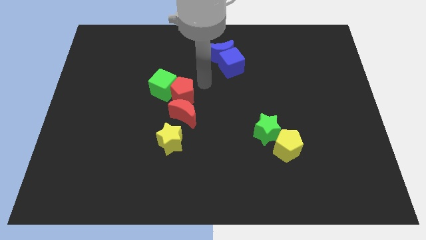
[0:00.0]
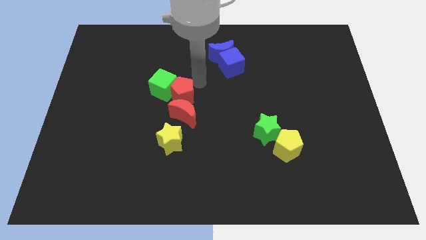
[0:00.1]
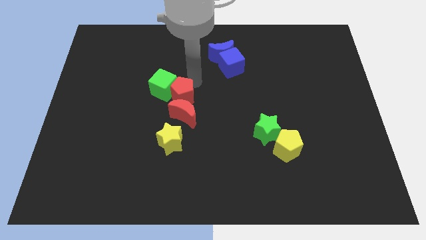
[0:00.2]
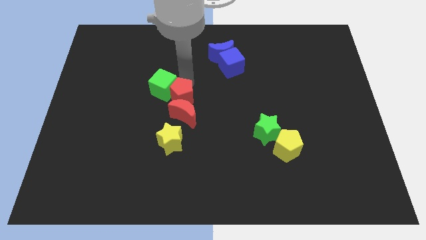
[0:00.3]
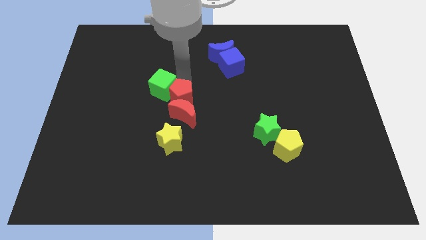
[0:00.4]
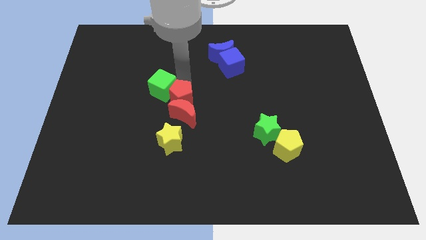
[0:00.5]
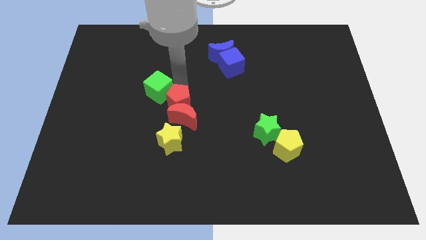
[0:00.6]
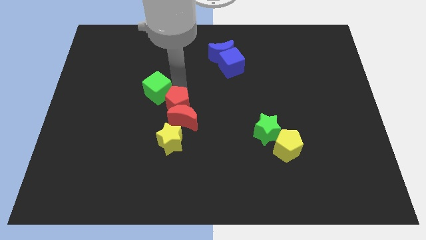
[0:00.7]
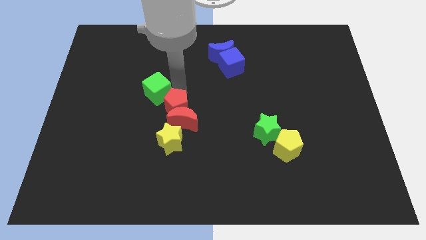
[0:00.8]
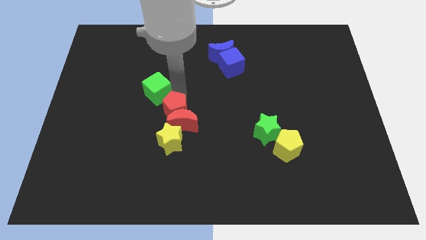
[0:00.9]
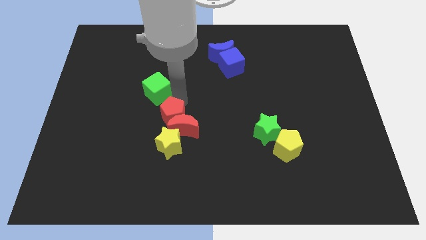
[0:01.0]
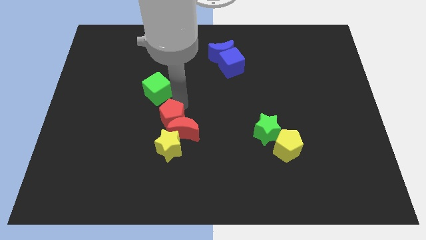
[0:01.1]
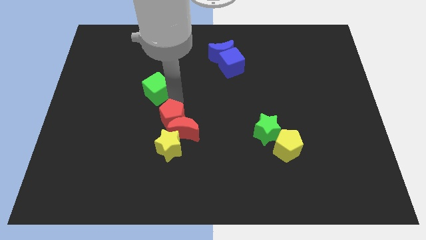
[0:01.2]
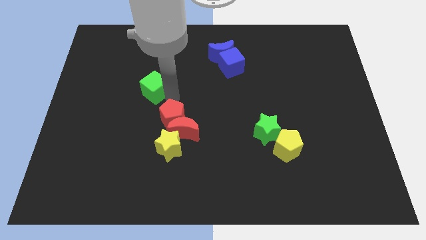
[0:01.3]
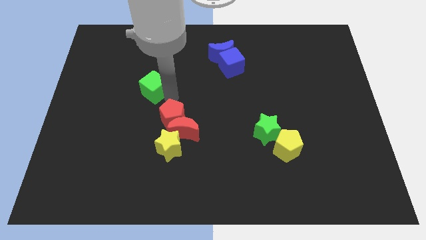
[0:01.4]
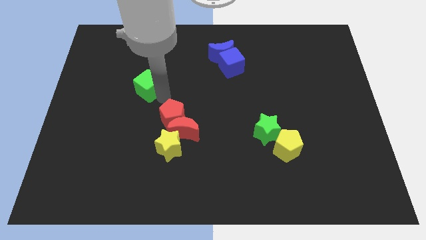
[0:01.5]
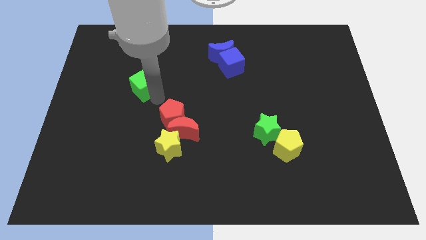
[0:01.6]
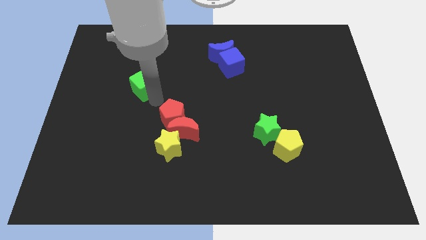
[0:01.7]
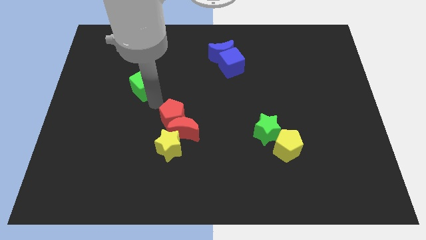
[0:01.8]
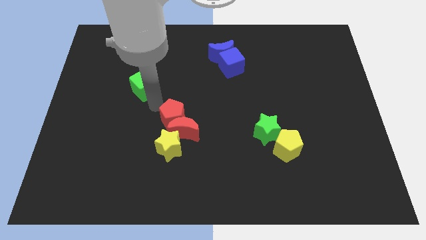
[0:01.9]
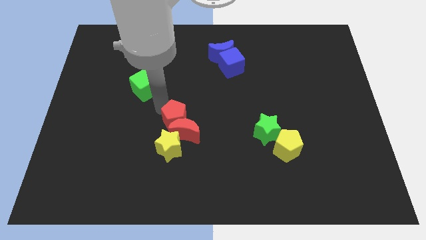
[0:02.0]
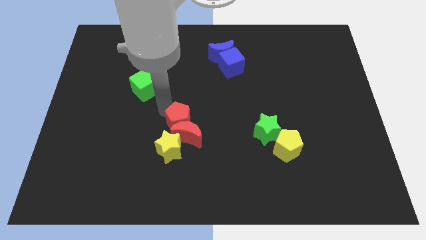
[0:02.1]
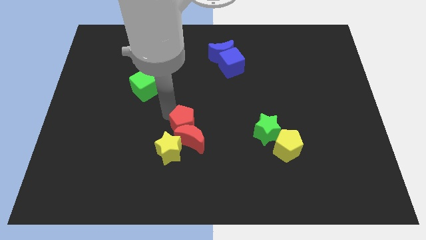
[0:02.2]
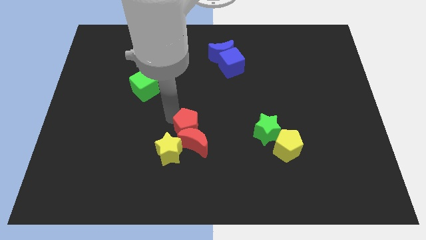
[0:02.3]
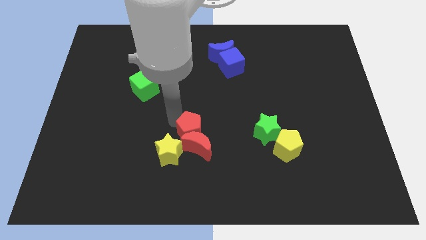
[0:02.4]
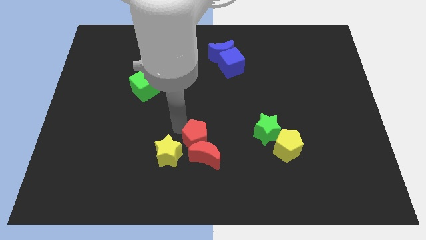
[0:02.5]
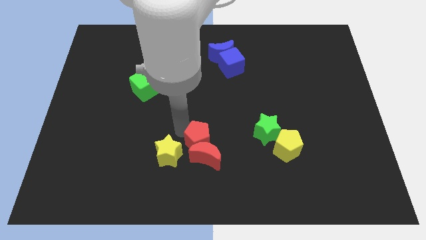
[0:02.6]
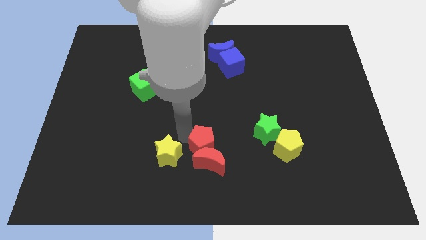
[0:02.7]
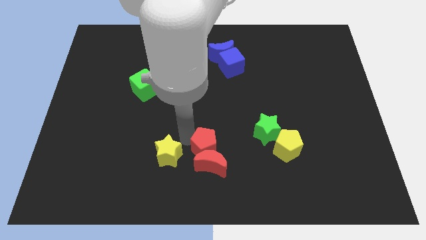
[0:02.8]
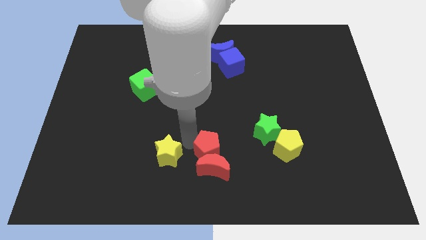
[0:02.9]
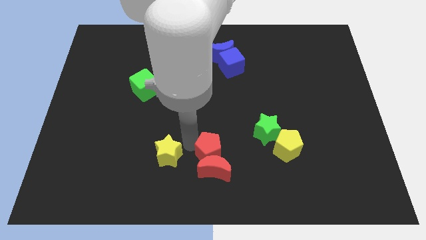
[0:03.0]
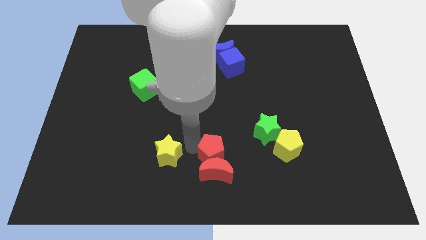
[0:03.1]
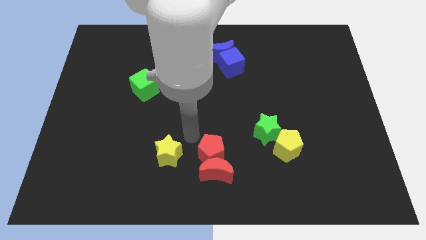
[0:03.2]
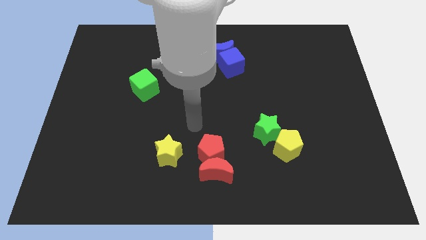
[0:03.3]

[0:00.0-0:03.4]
move the group of red blocks to the right of the yellow star

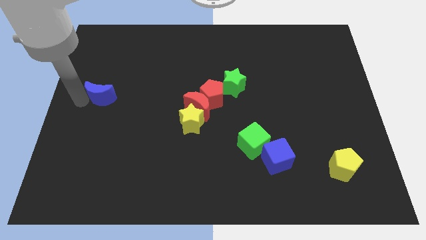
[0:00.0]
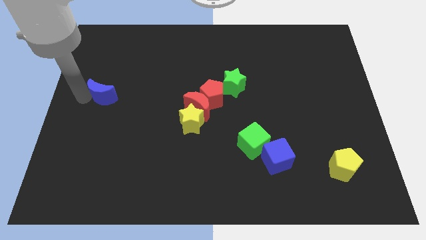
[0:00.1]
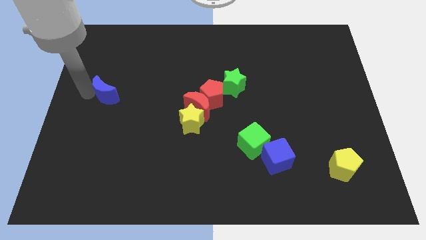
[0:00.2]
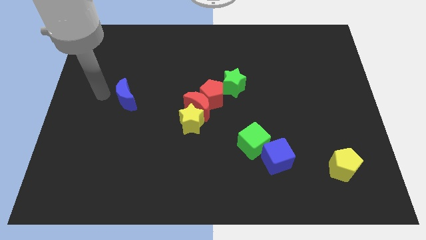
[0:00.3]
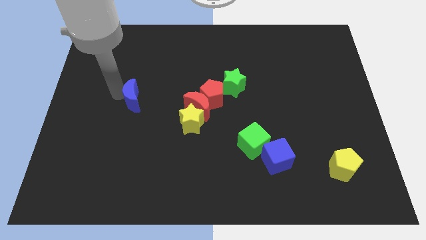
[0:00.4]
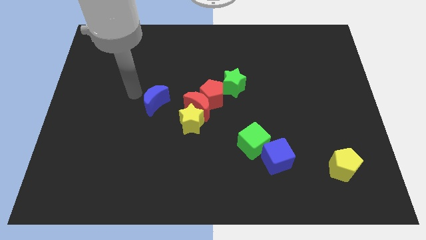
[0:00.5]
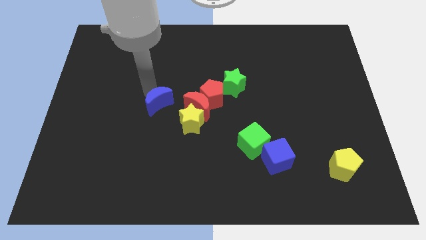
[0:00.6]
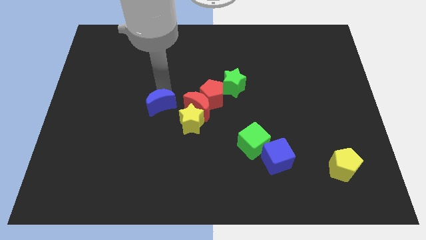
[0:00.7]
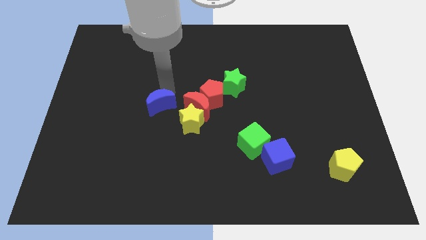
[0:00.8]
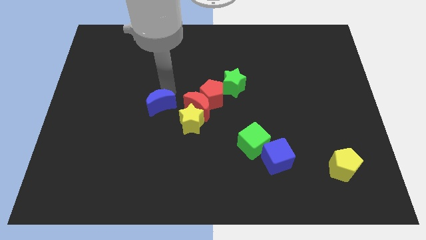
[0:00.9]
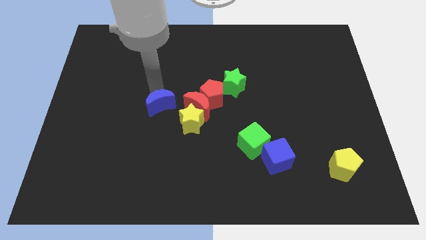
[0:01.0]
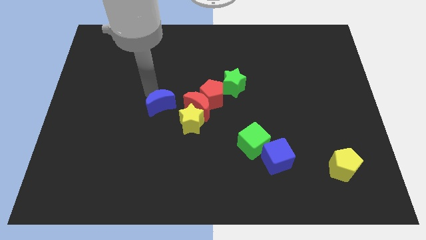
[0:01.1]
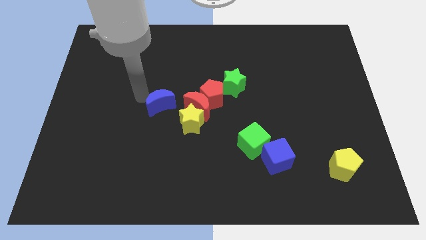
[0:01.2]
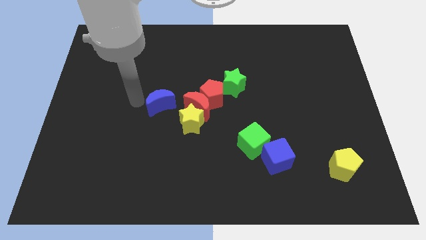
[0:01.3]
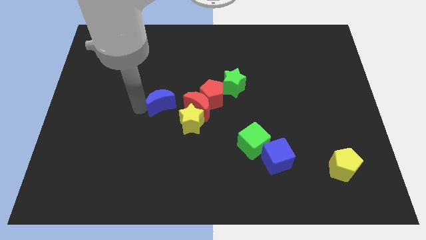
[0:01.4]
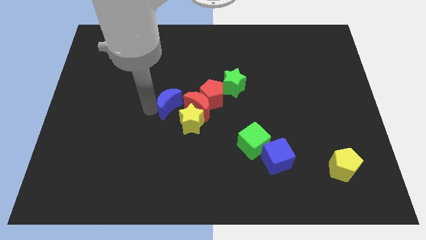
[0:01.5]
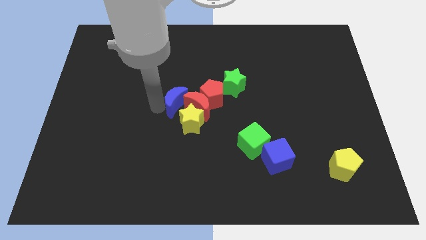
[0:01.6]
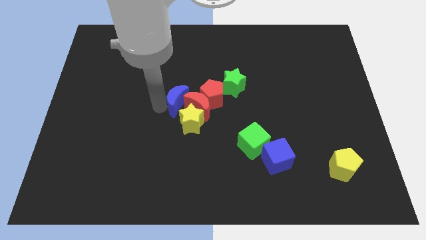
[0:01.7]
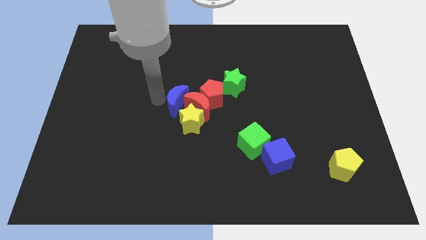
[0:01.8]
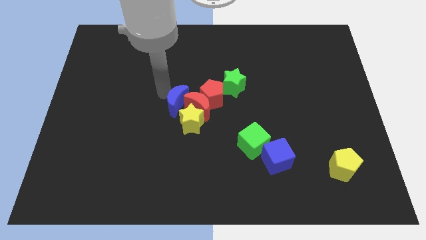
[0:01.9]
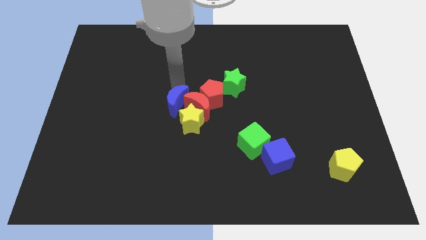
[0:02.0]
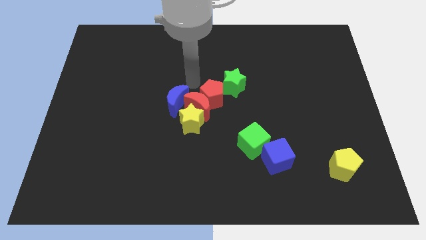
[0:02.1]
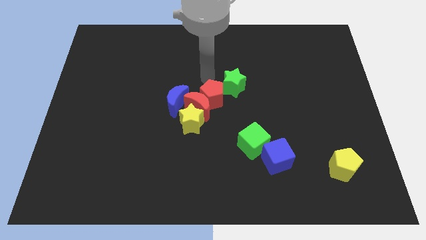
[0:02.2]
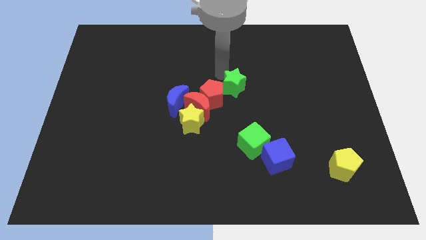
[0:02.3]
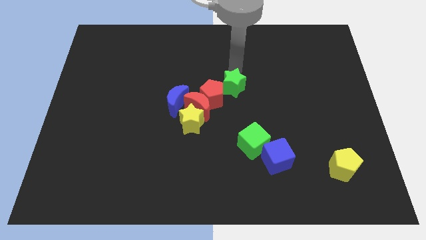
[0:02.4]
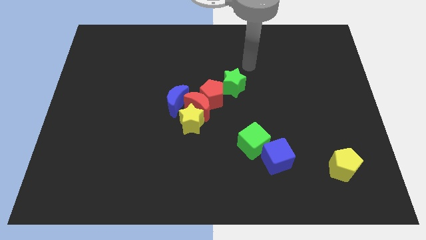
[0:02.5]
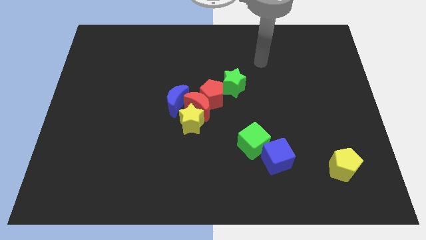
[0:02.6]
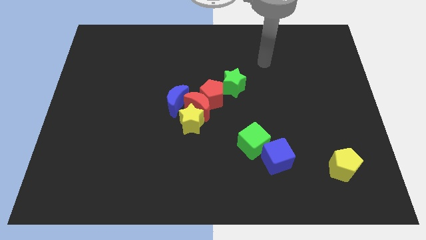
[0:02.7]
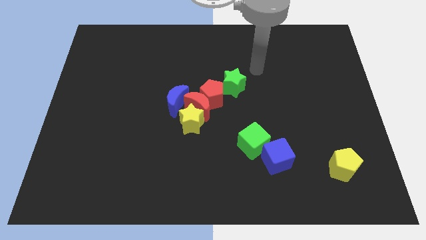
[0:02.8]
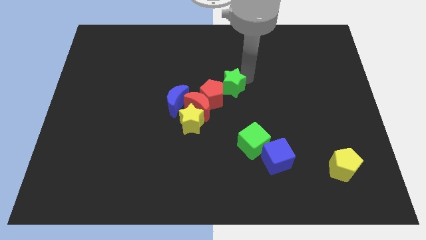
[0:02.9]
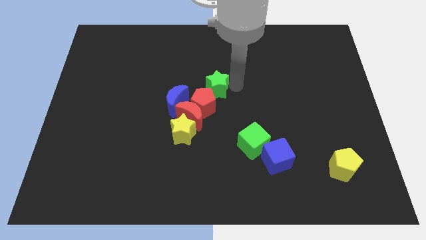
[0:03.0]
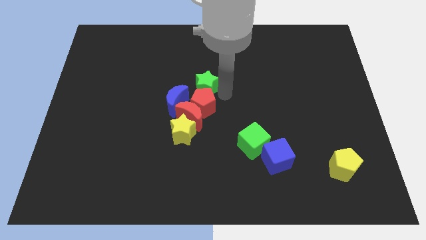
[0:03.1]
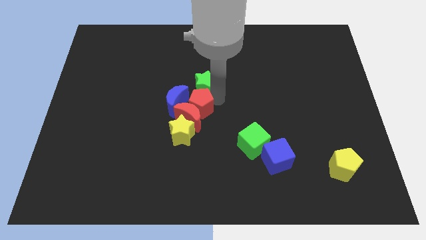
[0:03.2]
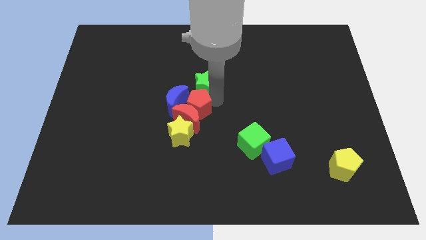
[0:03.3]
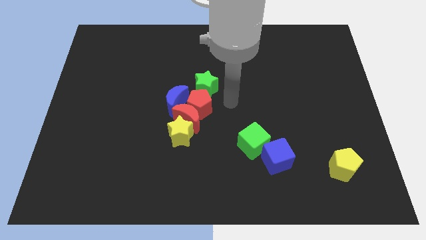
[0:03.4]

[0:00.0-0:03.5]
push the blue moon to the left side of the red blocks

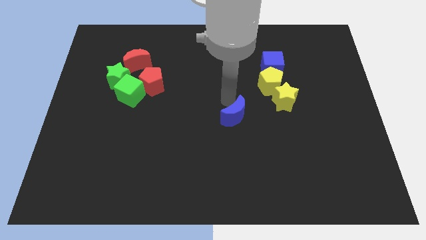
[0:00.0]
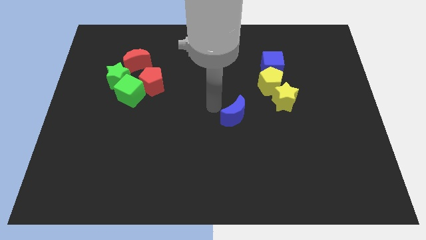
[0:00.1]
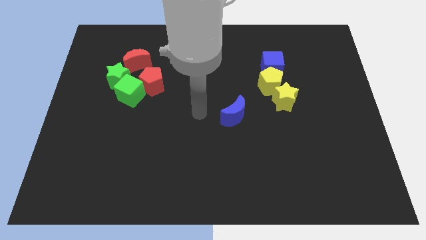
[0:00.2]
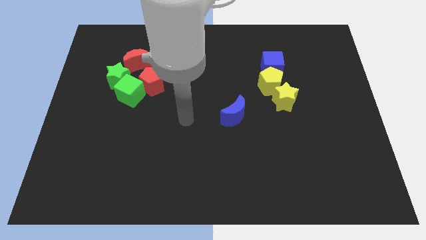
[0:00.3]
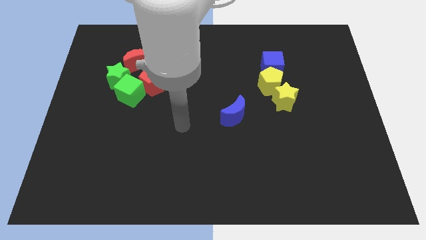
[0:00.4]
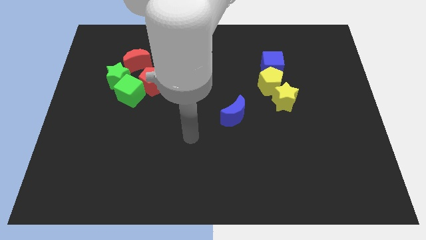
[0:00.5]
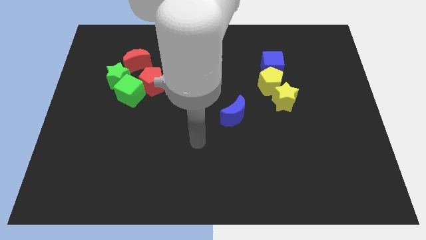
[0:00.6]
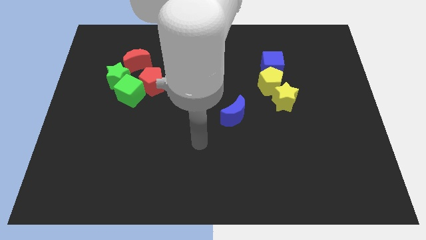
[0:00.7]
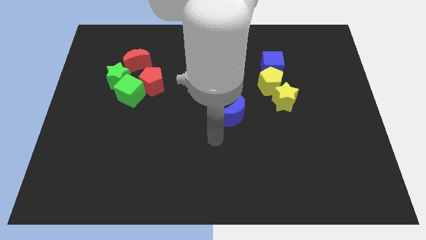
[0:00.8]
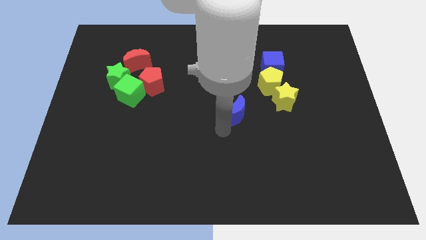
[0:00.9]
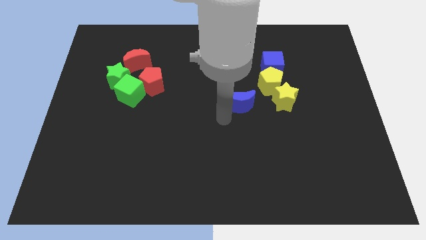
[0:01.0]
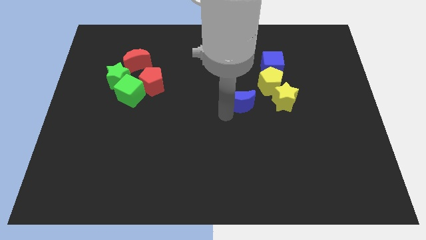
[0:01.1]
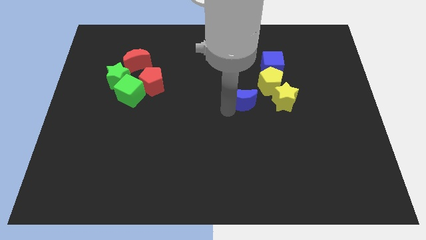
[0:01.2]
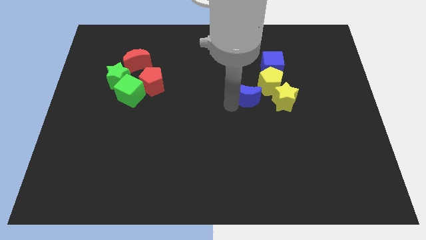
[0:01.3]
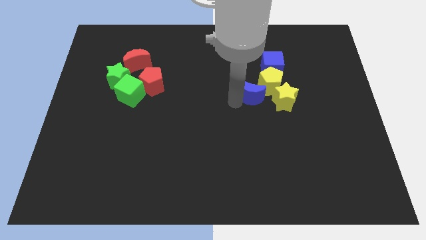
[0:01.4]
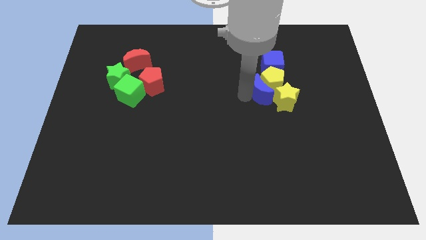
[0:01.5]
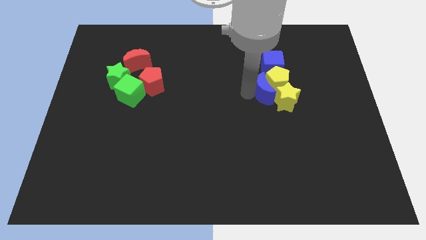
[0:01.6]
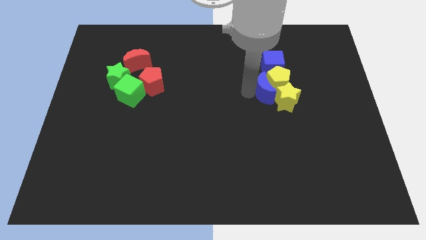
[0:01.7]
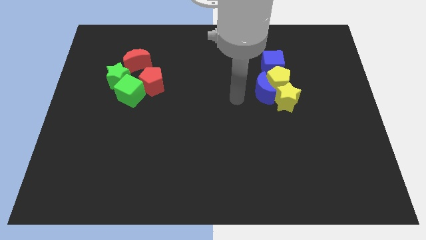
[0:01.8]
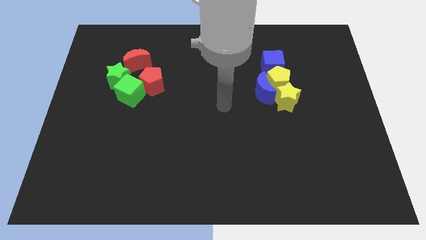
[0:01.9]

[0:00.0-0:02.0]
touch both the yellow objects with blue crescent

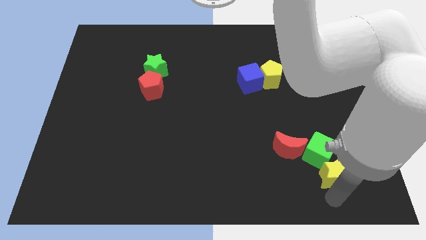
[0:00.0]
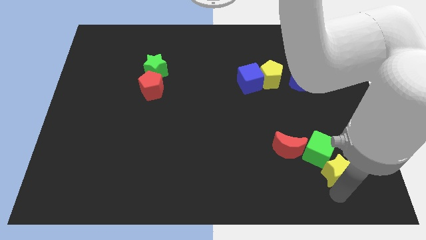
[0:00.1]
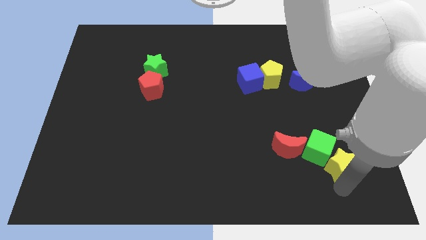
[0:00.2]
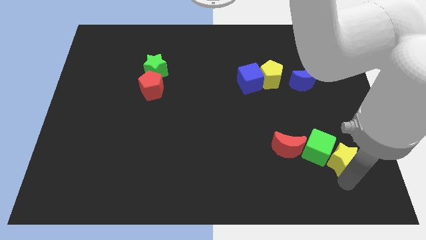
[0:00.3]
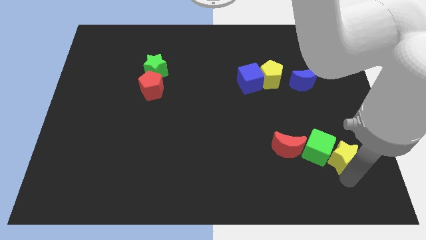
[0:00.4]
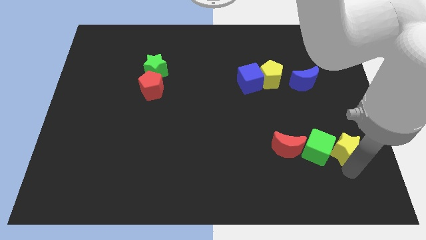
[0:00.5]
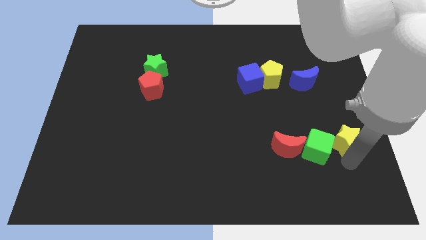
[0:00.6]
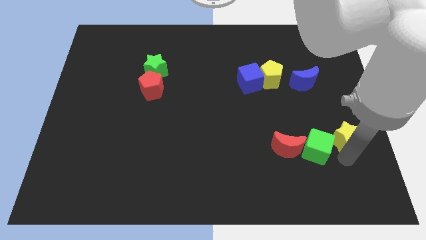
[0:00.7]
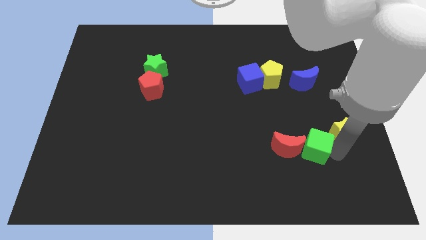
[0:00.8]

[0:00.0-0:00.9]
push yellow star upwards
